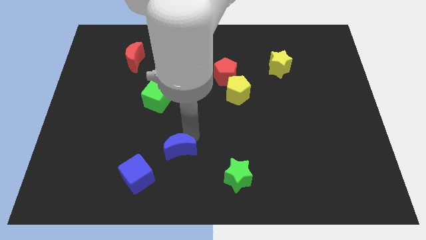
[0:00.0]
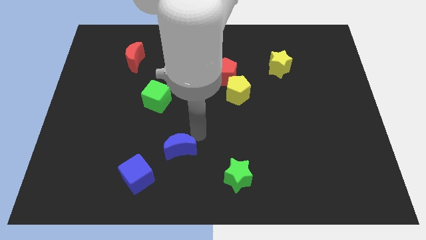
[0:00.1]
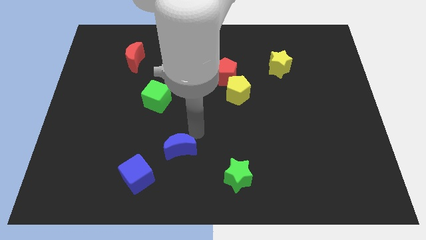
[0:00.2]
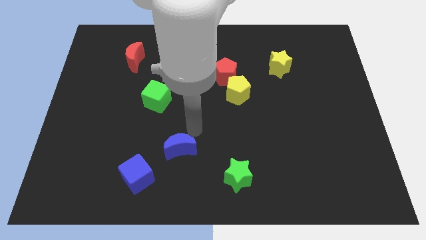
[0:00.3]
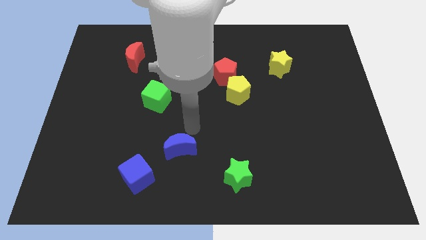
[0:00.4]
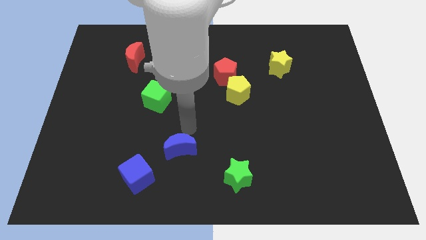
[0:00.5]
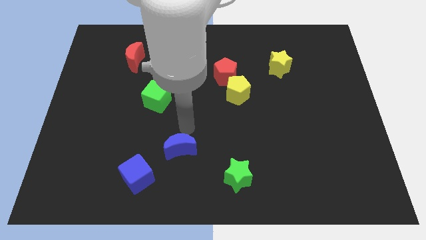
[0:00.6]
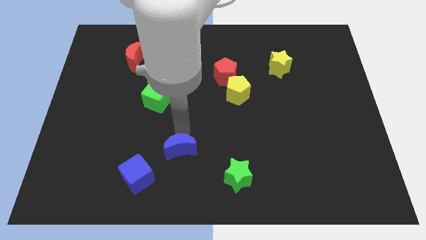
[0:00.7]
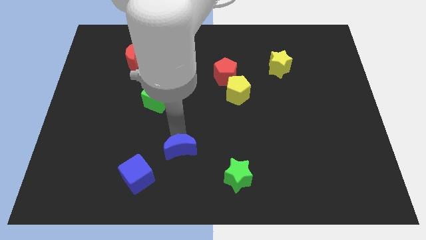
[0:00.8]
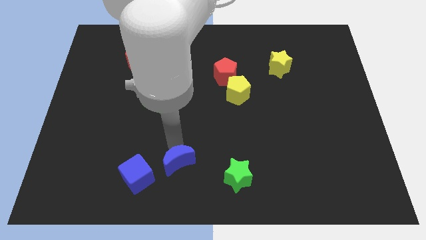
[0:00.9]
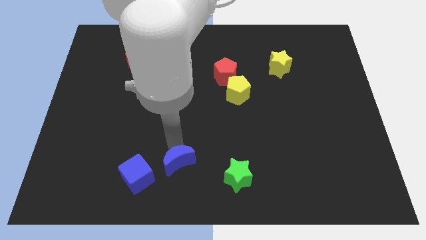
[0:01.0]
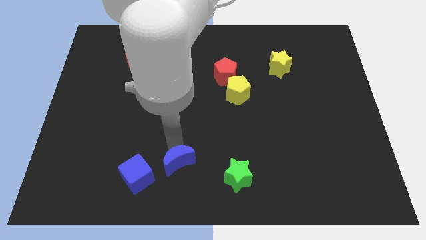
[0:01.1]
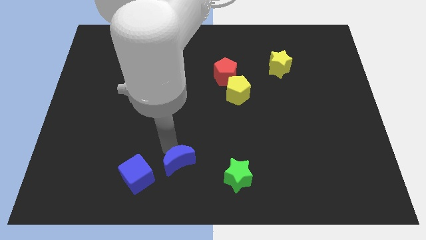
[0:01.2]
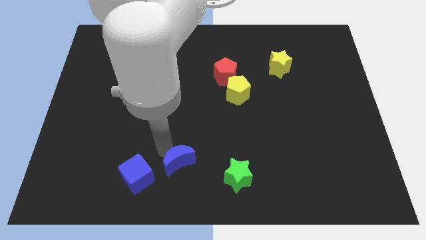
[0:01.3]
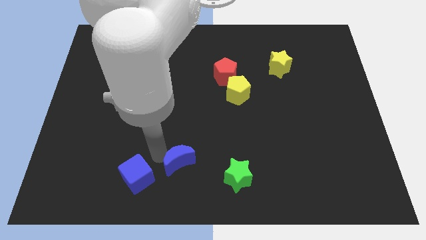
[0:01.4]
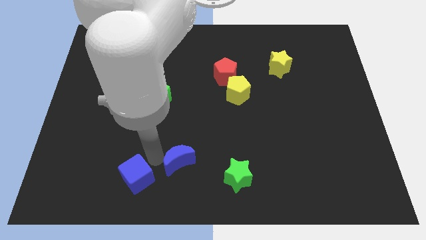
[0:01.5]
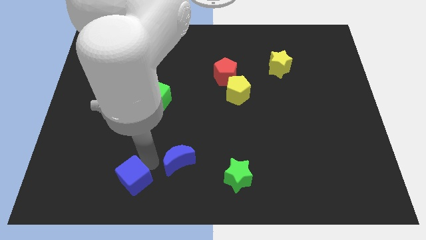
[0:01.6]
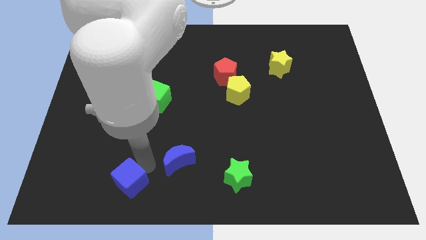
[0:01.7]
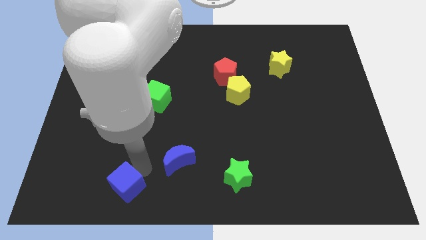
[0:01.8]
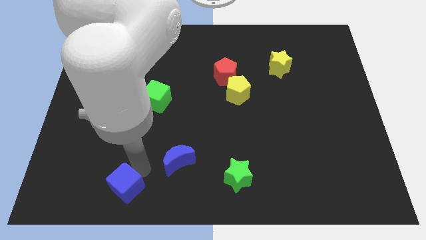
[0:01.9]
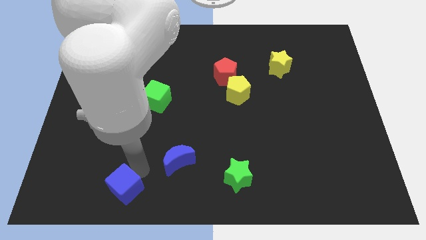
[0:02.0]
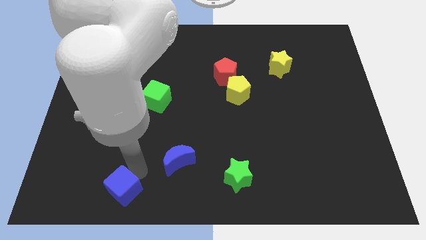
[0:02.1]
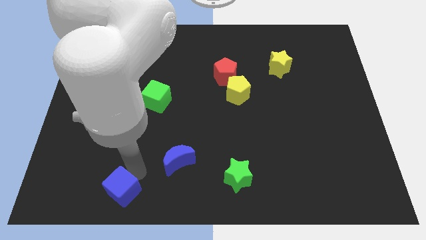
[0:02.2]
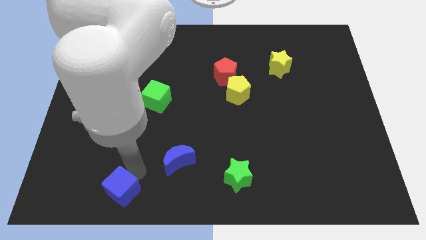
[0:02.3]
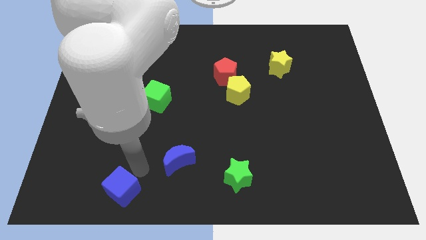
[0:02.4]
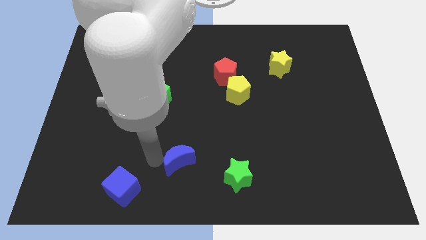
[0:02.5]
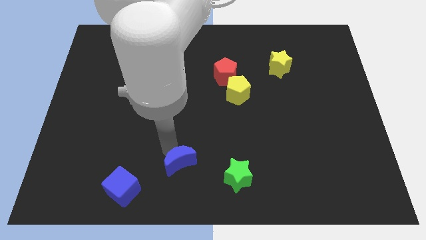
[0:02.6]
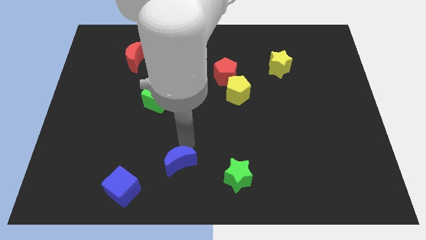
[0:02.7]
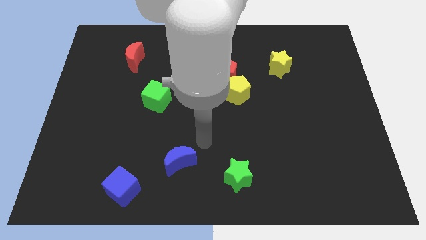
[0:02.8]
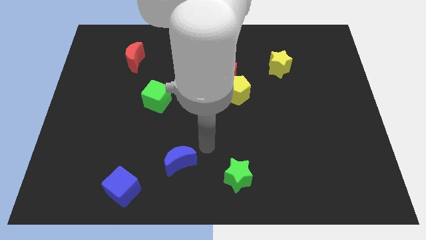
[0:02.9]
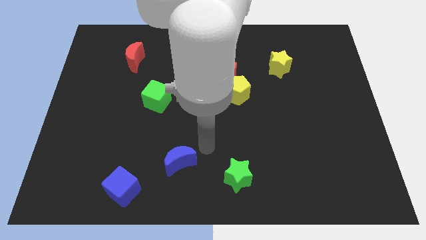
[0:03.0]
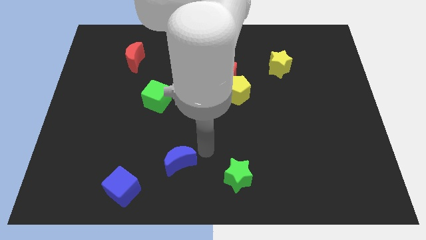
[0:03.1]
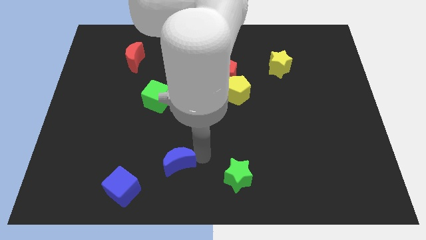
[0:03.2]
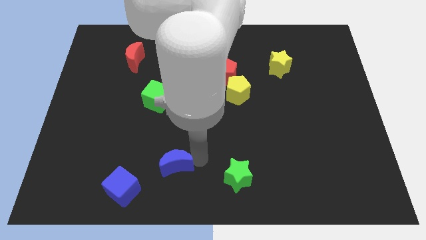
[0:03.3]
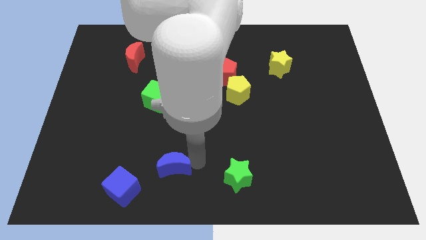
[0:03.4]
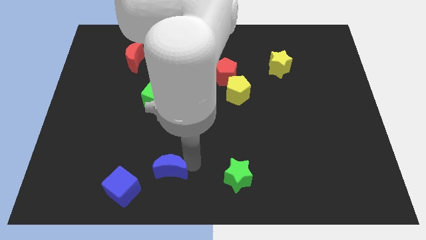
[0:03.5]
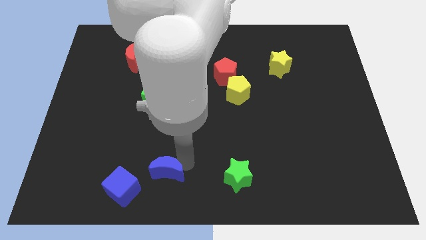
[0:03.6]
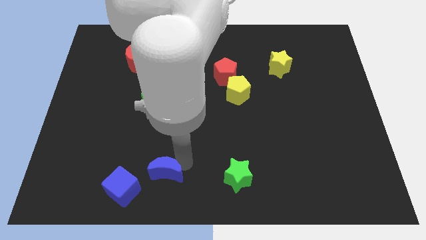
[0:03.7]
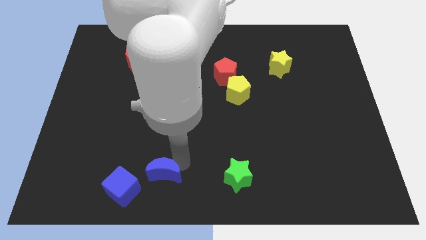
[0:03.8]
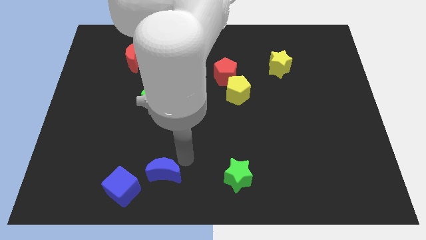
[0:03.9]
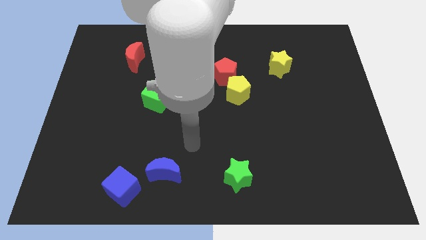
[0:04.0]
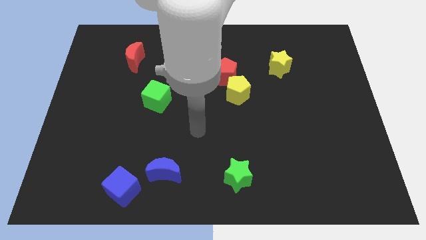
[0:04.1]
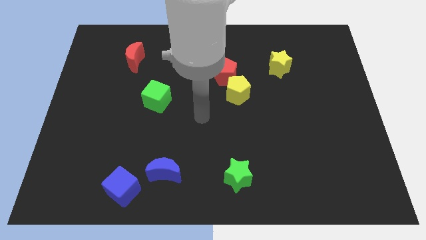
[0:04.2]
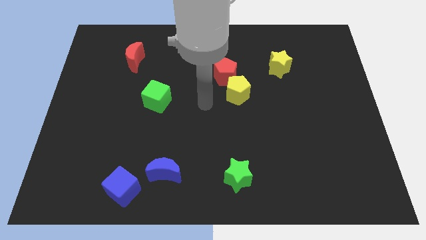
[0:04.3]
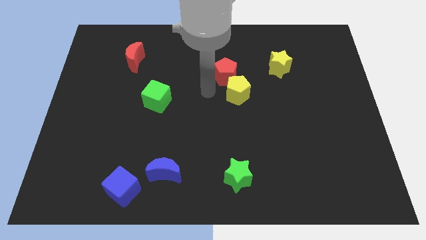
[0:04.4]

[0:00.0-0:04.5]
push the blue crescent and blue cube towards the bottom left of the board

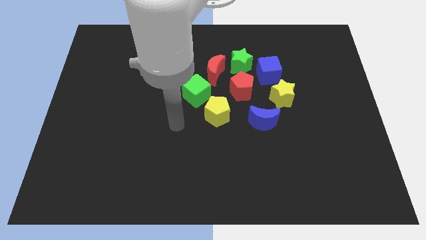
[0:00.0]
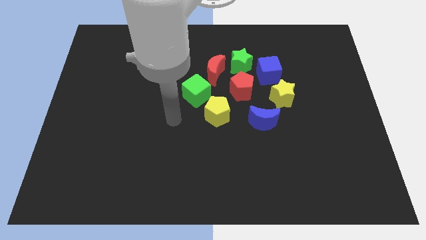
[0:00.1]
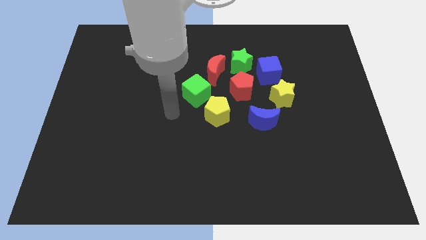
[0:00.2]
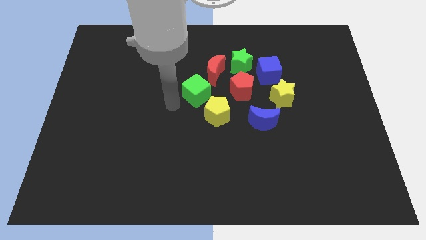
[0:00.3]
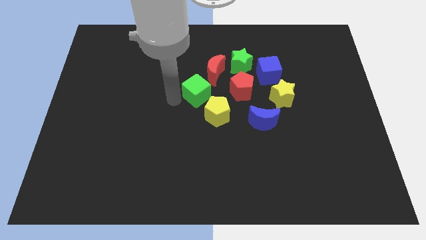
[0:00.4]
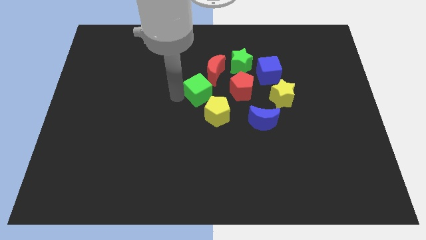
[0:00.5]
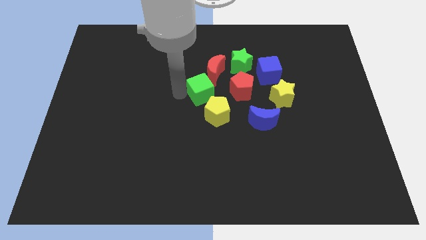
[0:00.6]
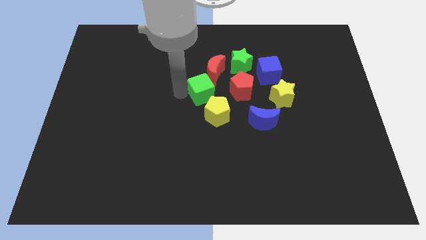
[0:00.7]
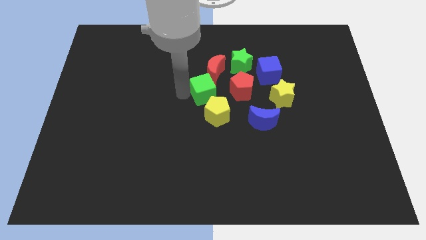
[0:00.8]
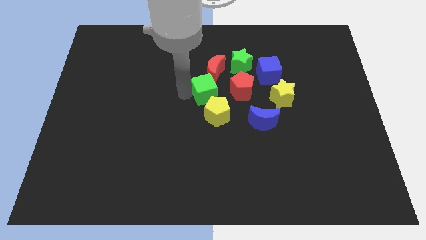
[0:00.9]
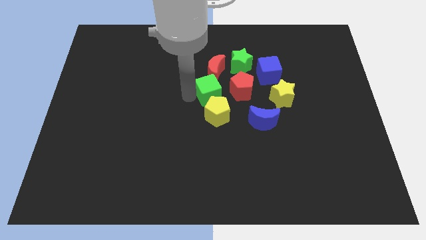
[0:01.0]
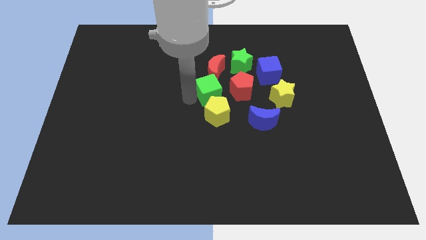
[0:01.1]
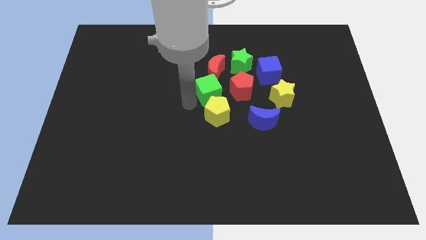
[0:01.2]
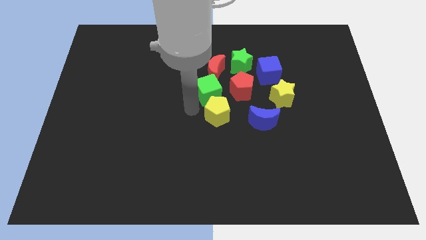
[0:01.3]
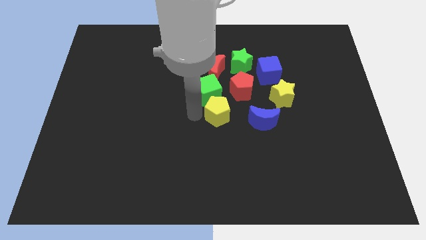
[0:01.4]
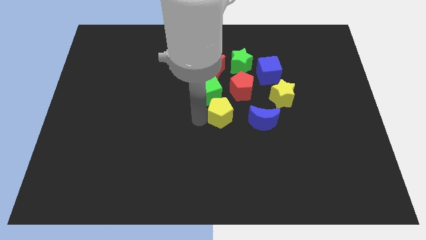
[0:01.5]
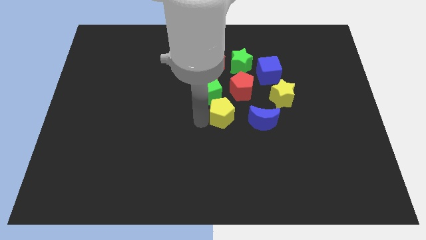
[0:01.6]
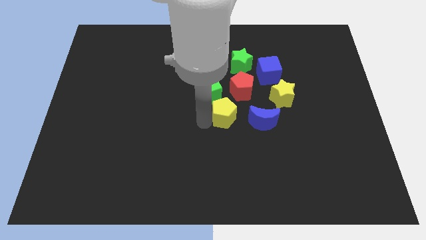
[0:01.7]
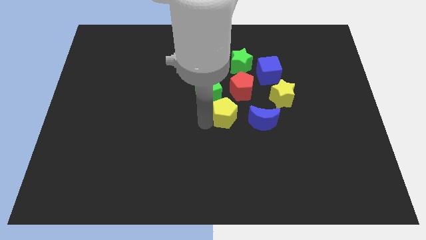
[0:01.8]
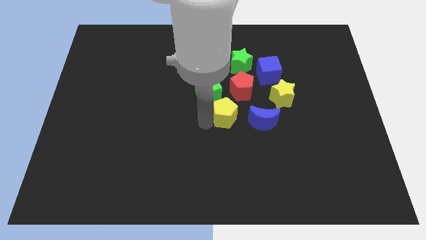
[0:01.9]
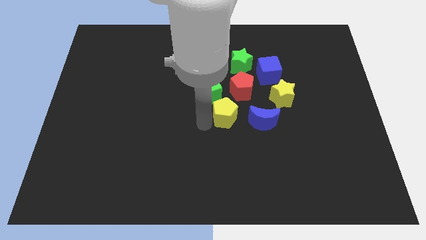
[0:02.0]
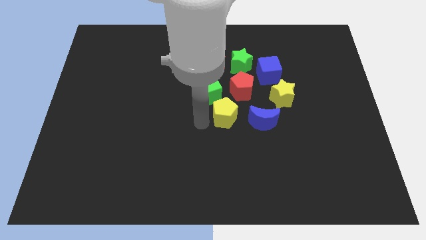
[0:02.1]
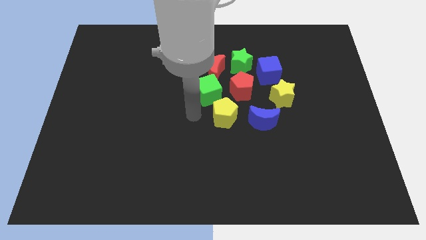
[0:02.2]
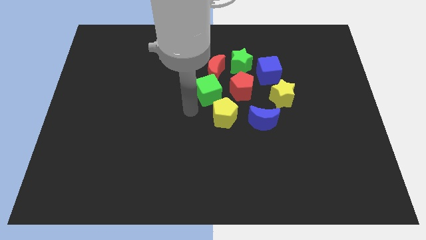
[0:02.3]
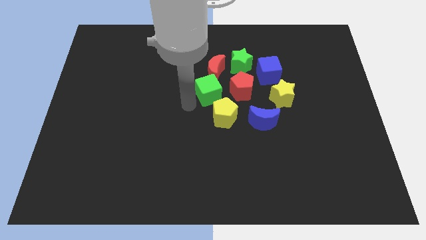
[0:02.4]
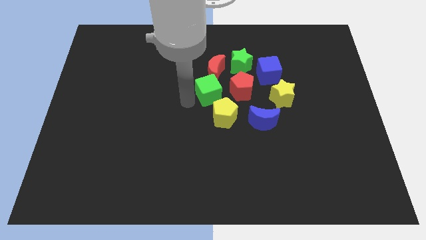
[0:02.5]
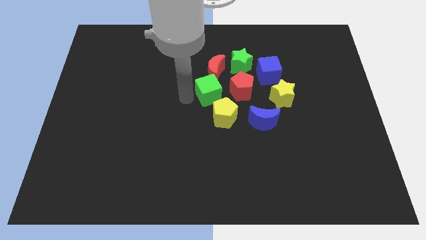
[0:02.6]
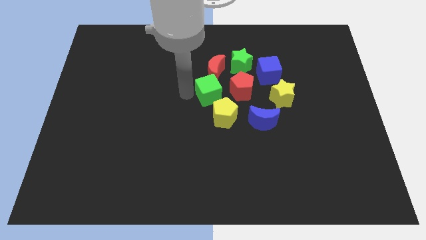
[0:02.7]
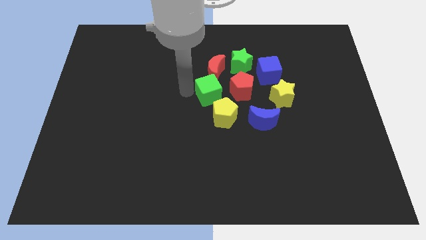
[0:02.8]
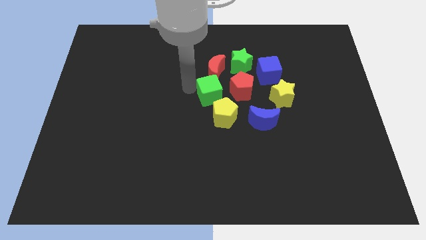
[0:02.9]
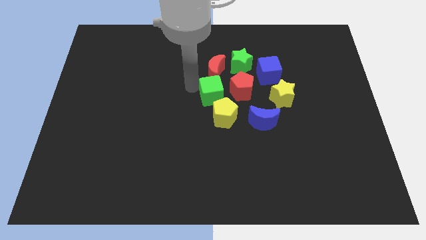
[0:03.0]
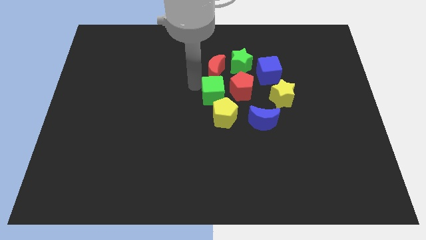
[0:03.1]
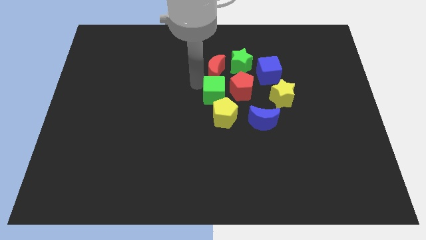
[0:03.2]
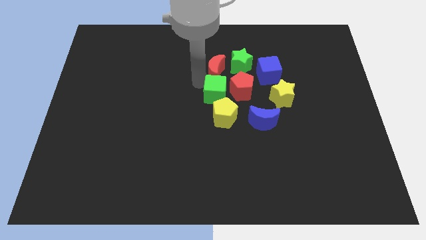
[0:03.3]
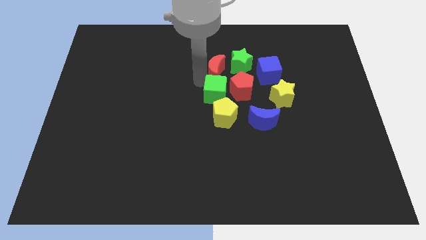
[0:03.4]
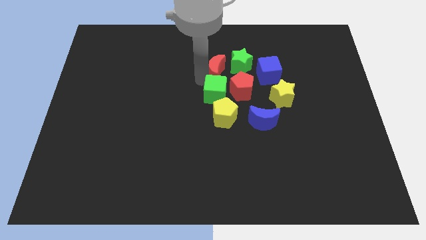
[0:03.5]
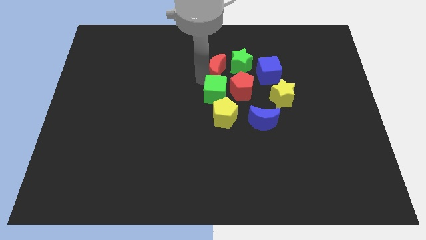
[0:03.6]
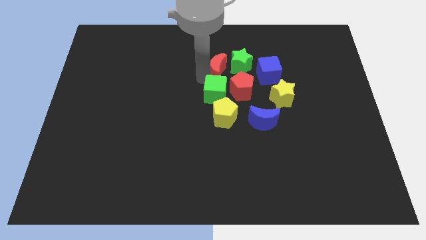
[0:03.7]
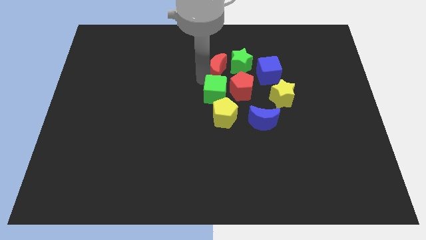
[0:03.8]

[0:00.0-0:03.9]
push the green cube to the left of the red pentagon

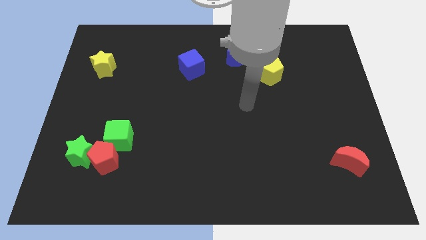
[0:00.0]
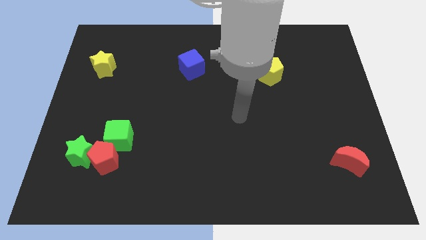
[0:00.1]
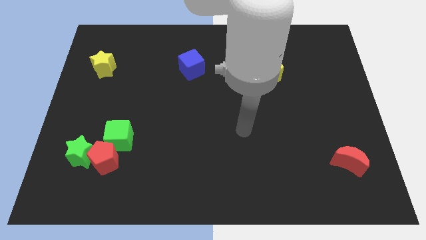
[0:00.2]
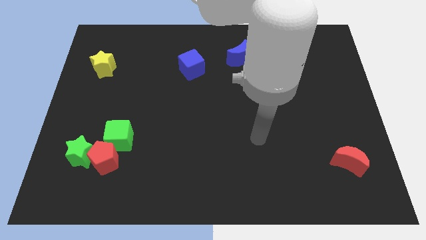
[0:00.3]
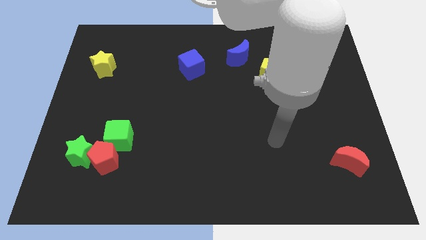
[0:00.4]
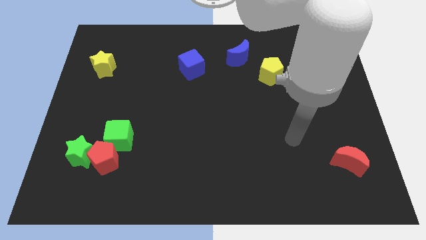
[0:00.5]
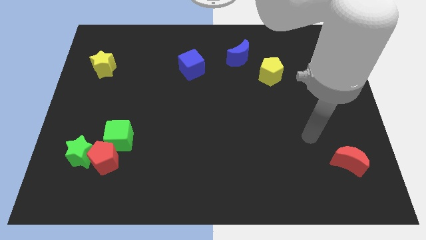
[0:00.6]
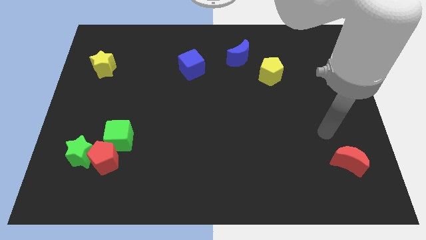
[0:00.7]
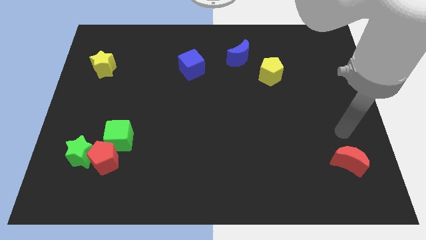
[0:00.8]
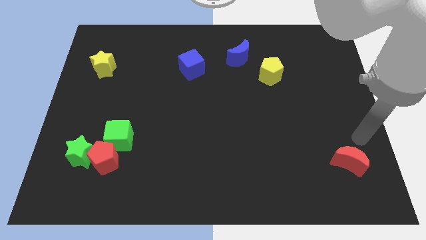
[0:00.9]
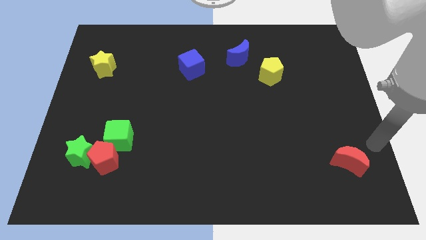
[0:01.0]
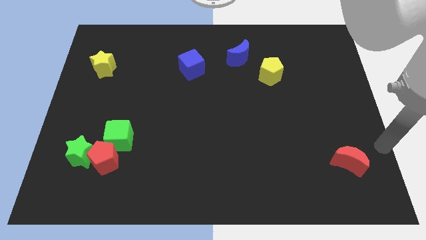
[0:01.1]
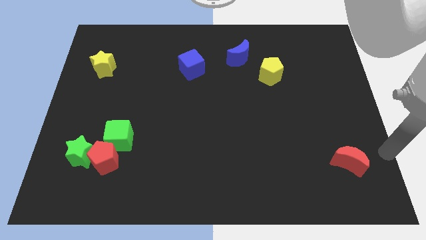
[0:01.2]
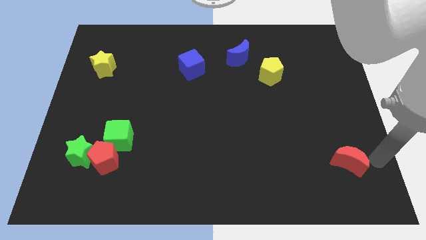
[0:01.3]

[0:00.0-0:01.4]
place the arm right to the red moon
